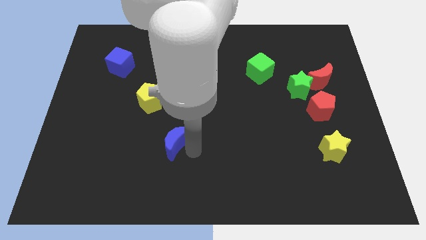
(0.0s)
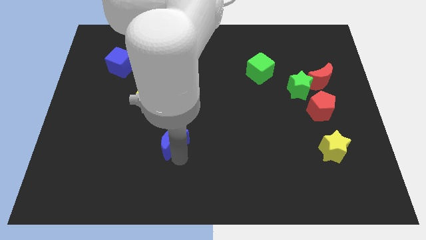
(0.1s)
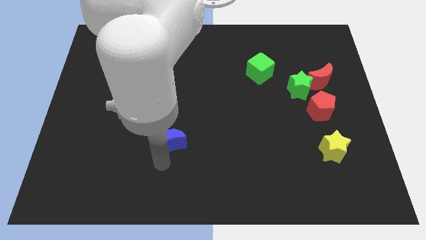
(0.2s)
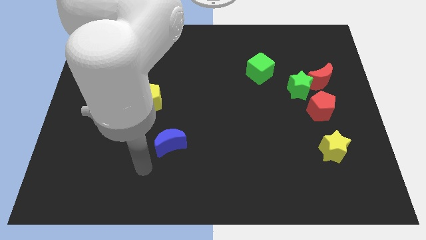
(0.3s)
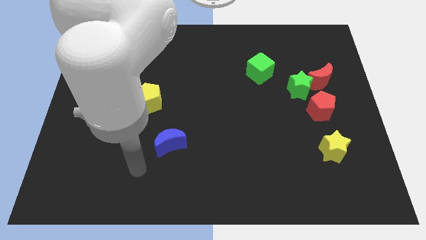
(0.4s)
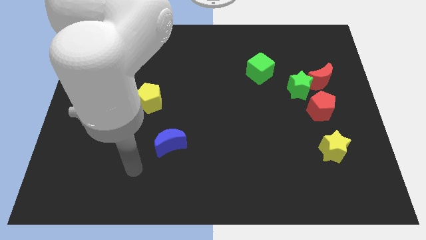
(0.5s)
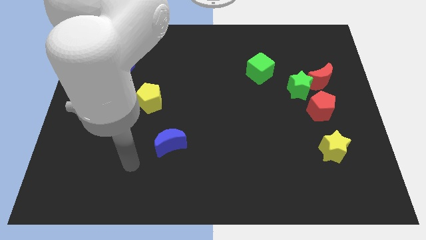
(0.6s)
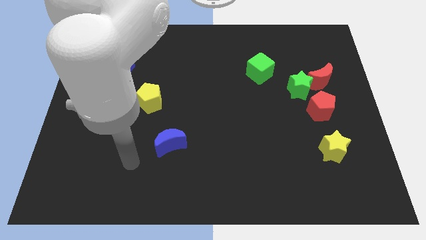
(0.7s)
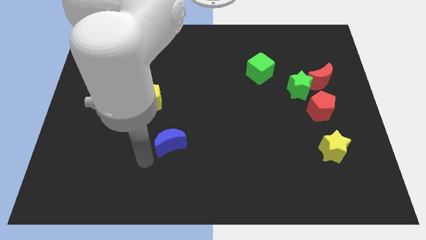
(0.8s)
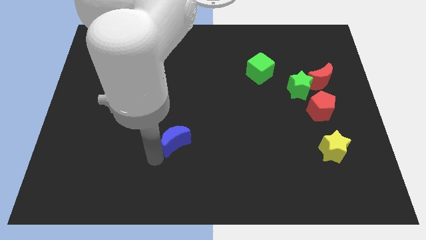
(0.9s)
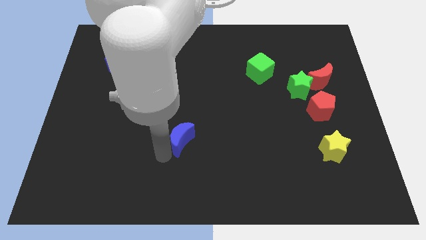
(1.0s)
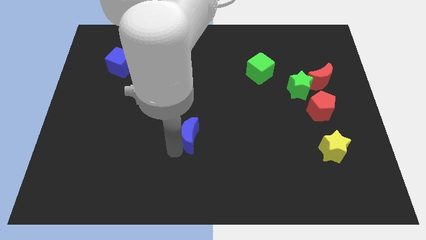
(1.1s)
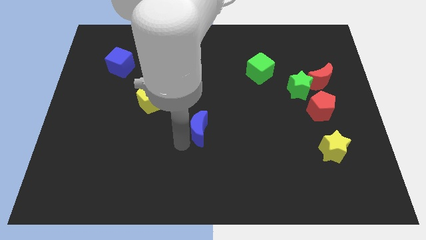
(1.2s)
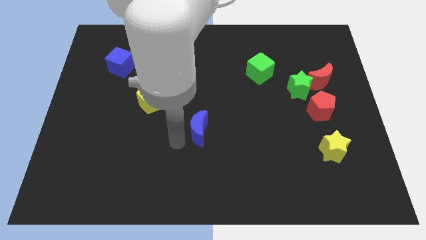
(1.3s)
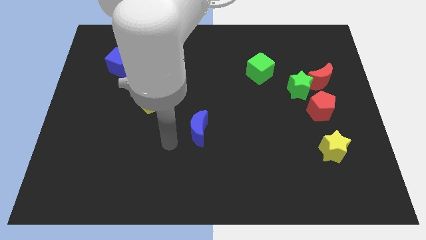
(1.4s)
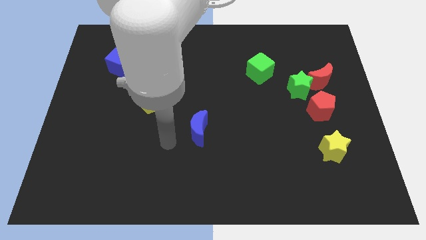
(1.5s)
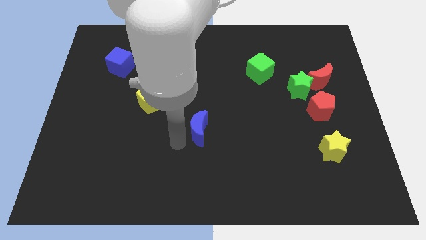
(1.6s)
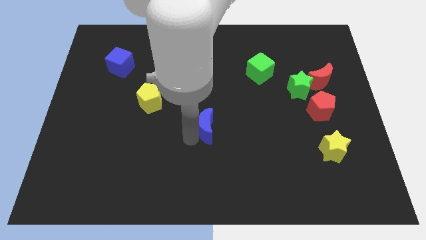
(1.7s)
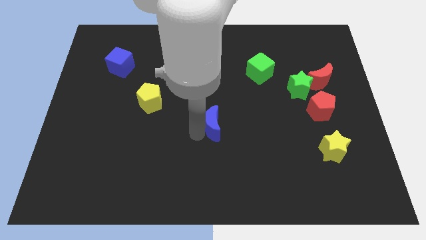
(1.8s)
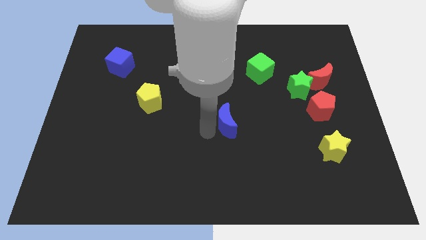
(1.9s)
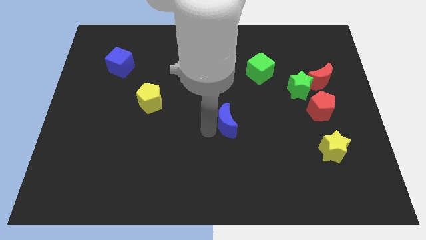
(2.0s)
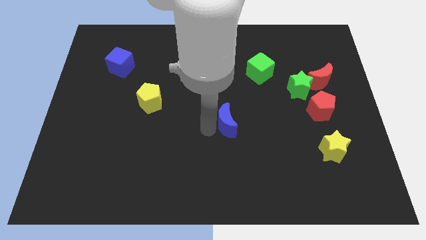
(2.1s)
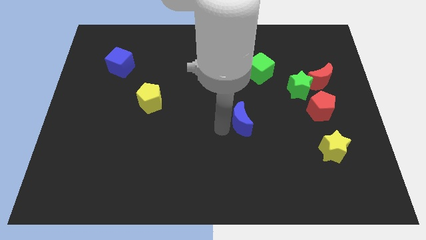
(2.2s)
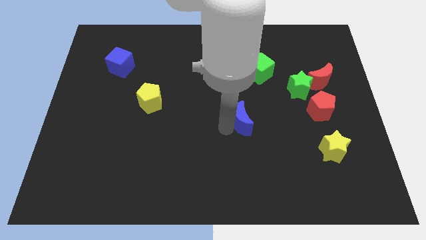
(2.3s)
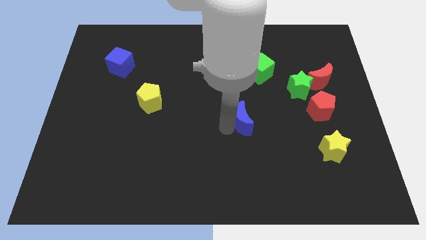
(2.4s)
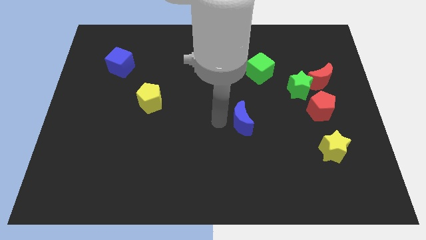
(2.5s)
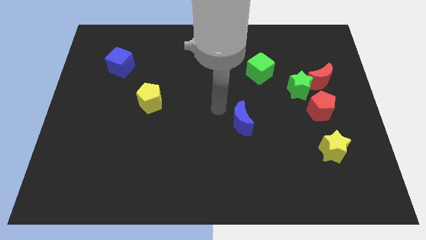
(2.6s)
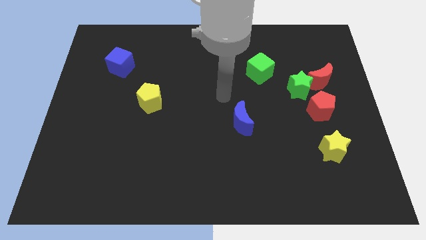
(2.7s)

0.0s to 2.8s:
place the blue moon diagonally bottom left to the green star

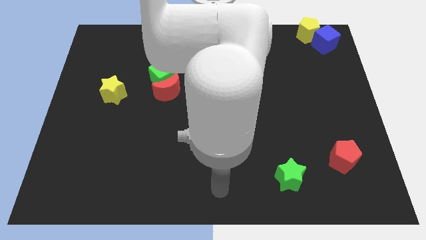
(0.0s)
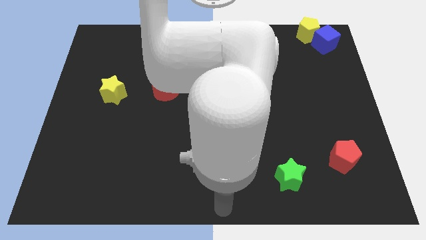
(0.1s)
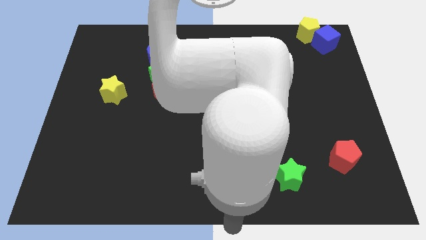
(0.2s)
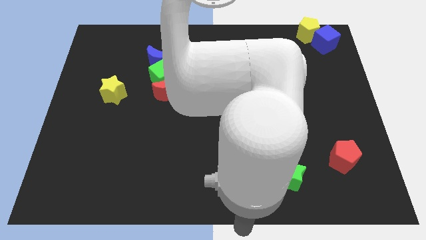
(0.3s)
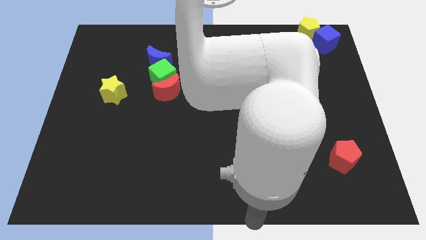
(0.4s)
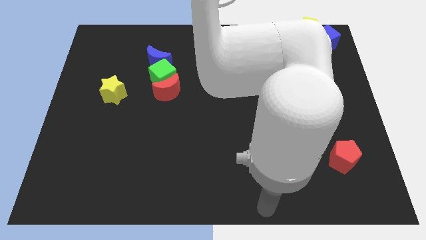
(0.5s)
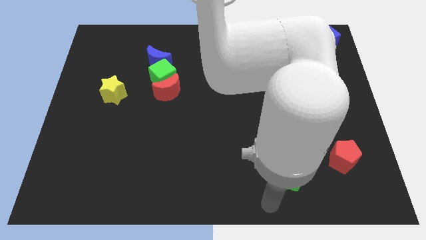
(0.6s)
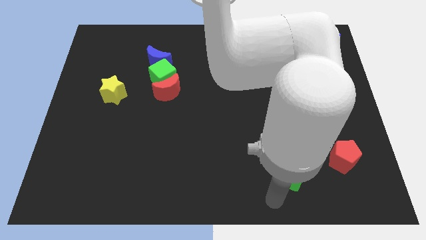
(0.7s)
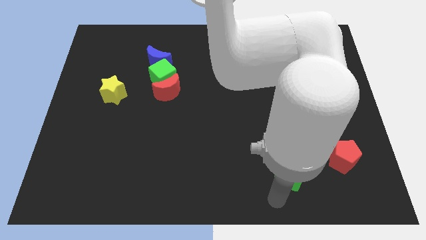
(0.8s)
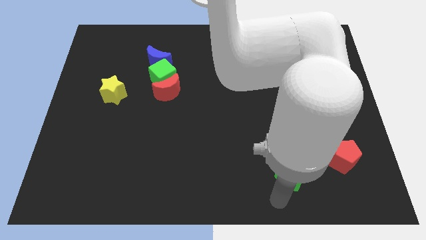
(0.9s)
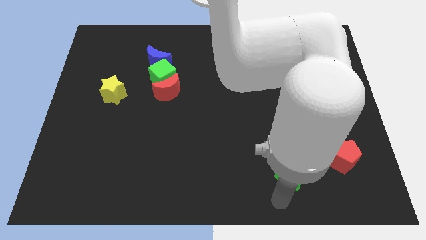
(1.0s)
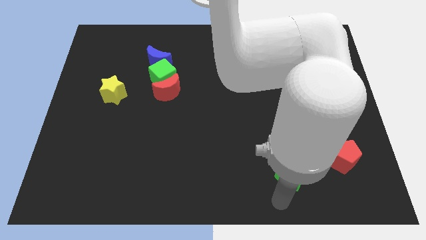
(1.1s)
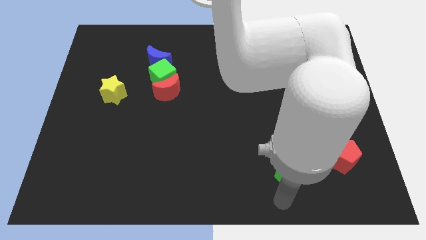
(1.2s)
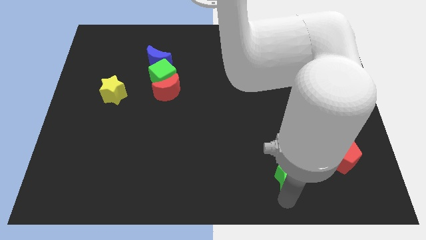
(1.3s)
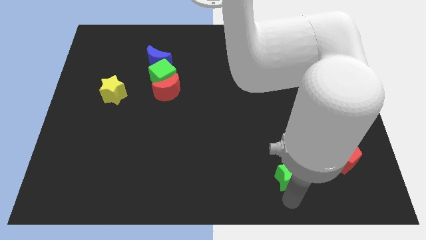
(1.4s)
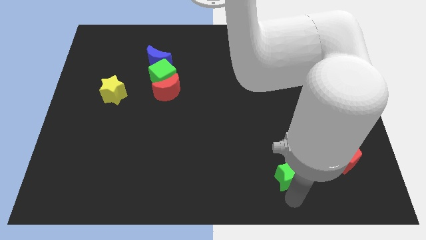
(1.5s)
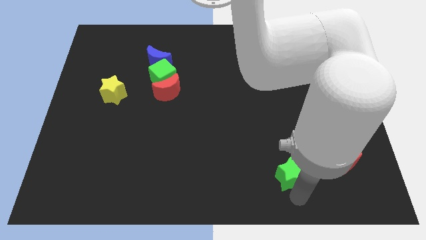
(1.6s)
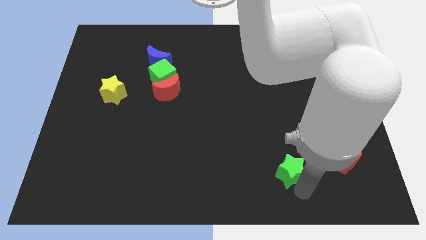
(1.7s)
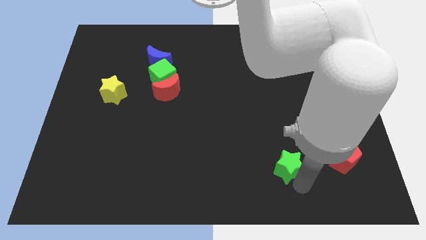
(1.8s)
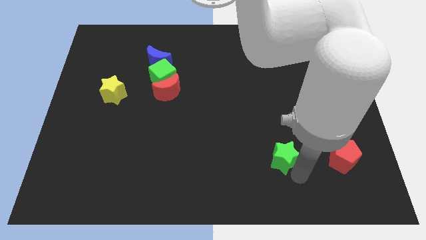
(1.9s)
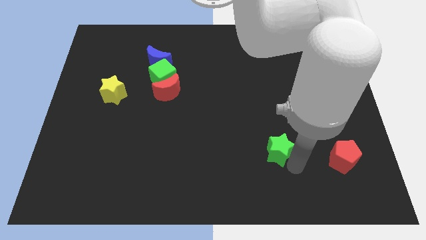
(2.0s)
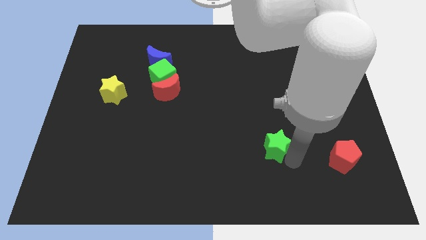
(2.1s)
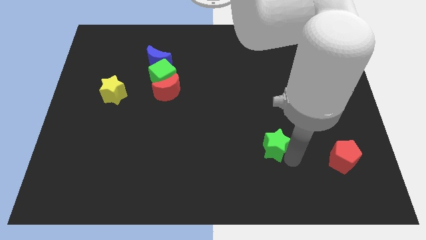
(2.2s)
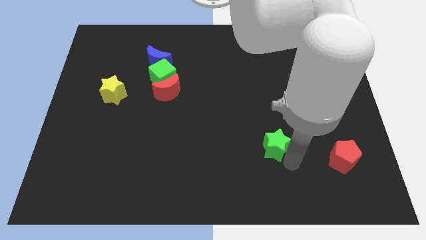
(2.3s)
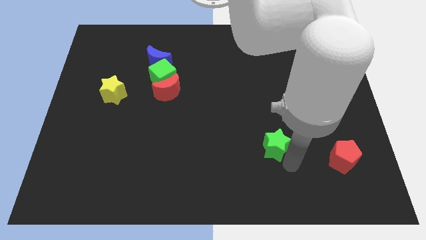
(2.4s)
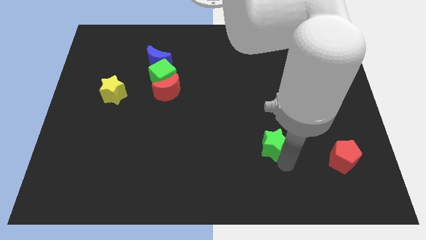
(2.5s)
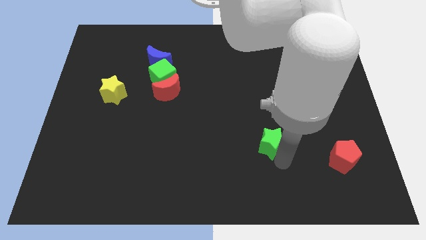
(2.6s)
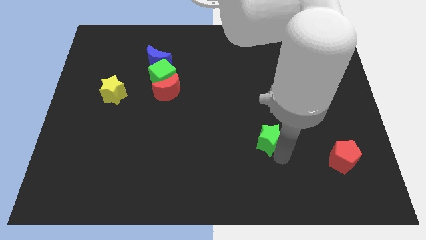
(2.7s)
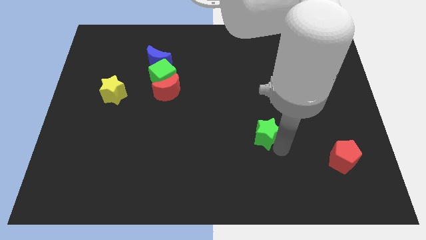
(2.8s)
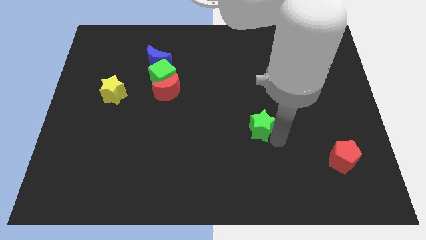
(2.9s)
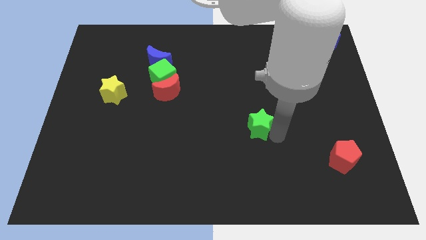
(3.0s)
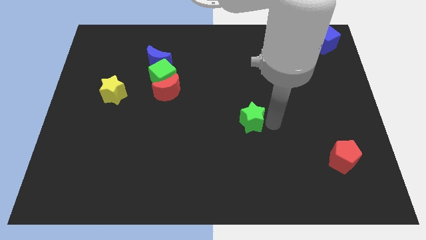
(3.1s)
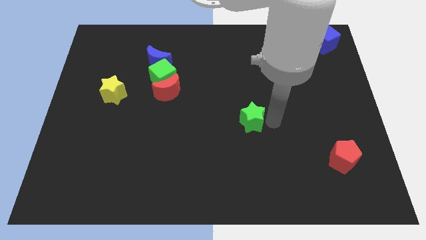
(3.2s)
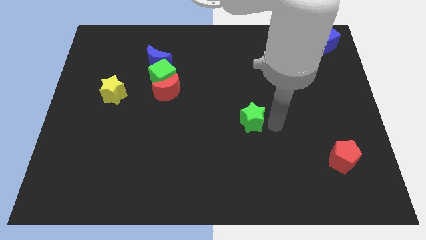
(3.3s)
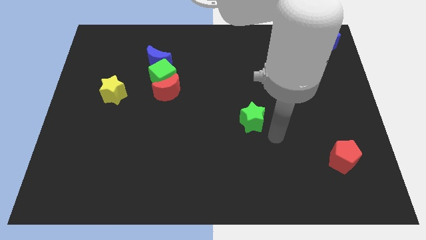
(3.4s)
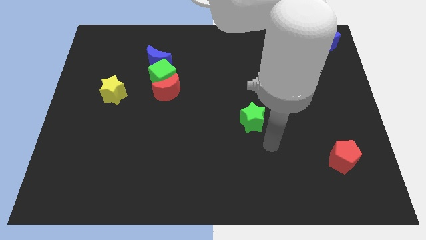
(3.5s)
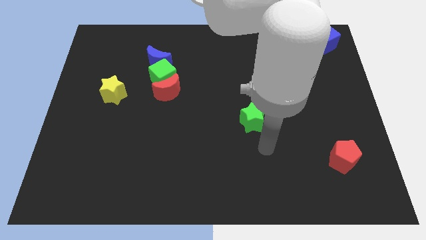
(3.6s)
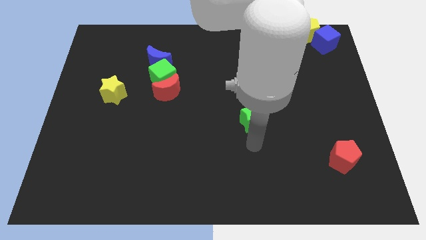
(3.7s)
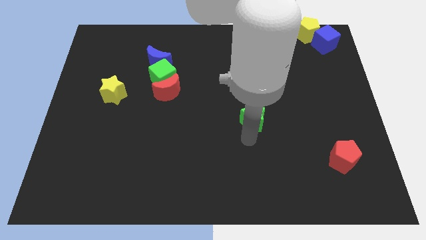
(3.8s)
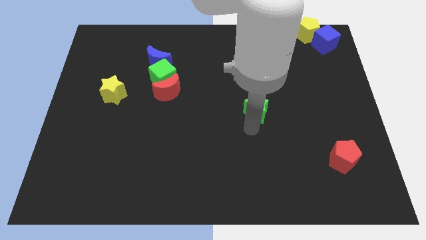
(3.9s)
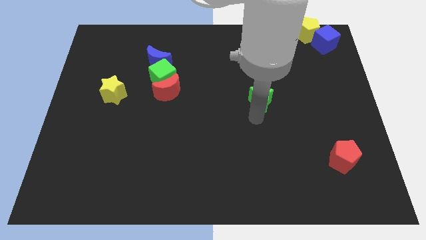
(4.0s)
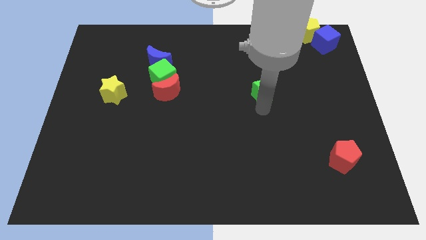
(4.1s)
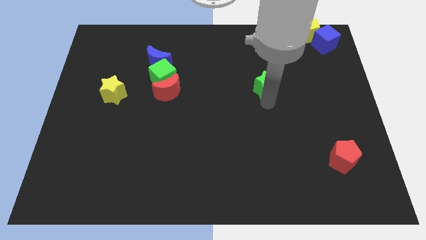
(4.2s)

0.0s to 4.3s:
push the green star in the center

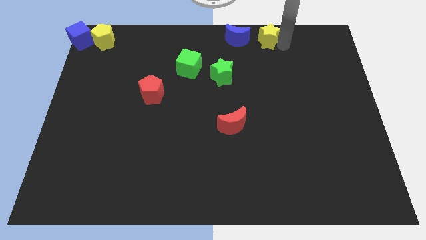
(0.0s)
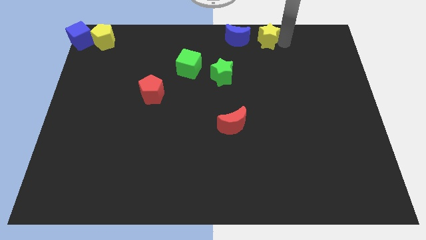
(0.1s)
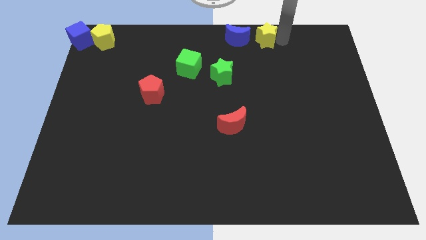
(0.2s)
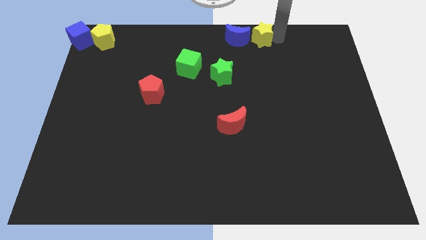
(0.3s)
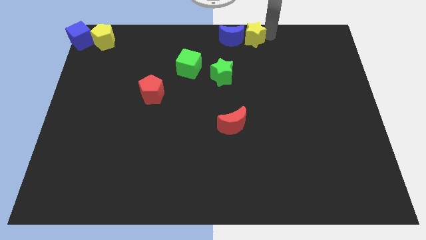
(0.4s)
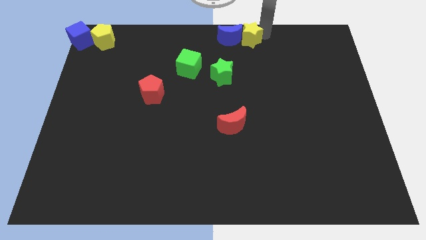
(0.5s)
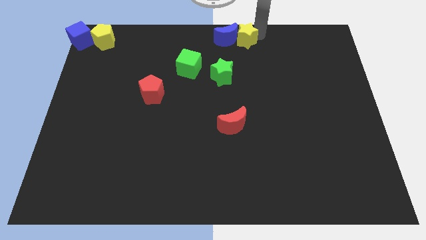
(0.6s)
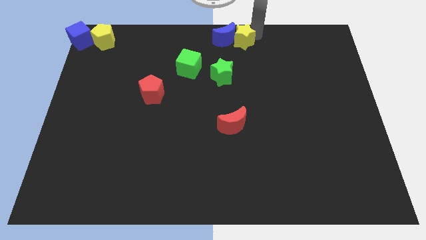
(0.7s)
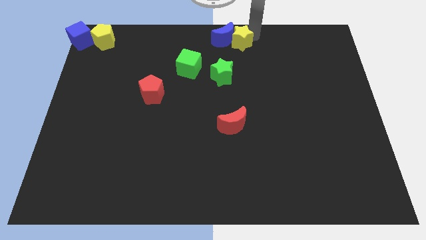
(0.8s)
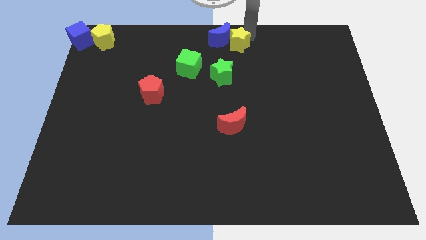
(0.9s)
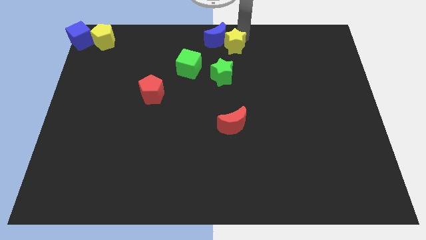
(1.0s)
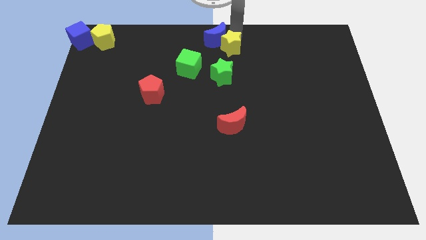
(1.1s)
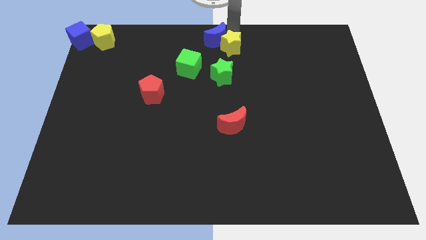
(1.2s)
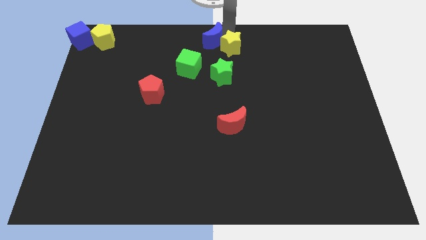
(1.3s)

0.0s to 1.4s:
push the yellow star into the blue moon

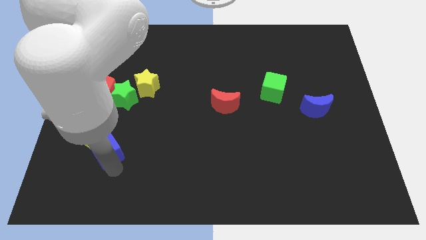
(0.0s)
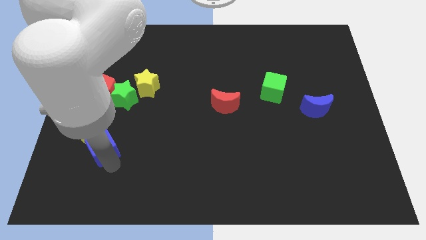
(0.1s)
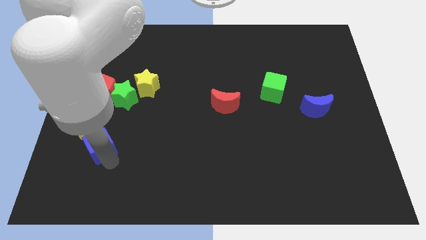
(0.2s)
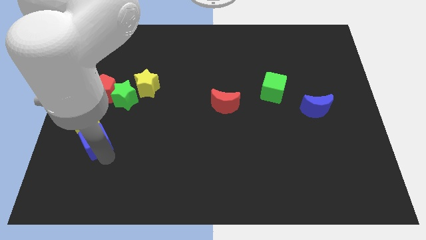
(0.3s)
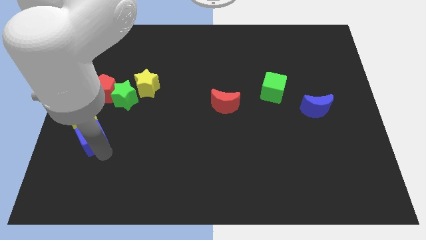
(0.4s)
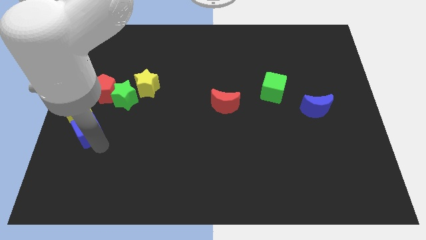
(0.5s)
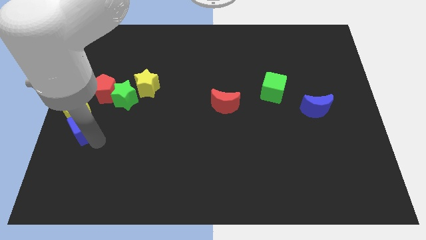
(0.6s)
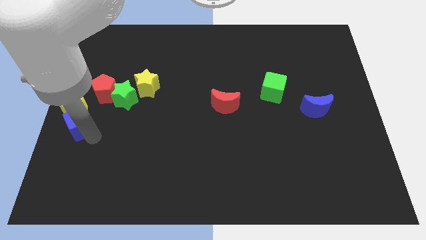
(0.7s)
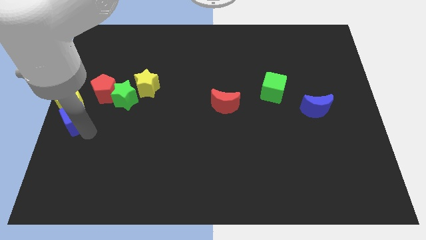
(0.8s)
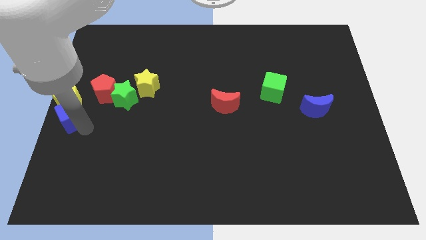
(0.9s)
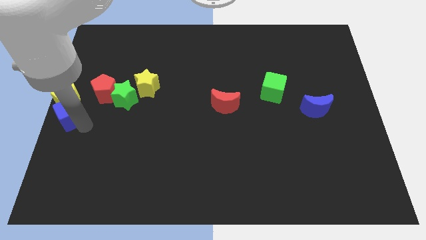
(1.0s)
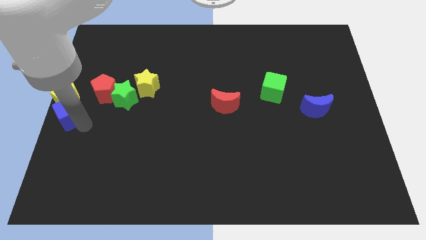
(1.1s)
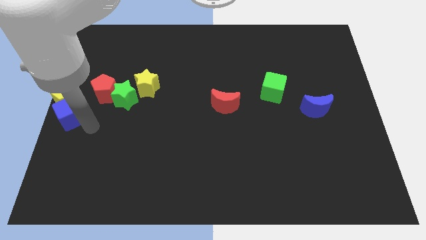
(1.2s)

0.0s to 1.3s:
place the yellow pentagon and blue cube to the left side of the red pentagon
